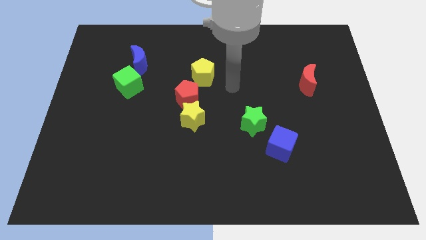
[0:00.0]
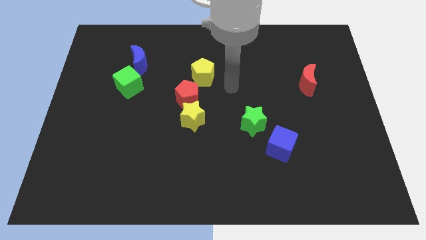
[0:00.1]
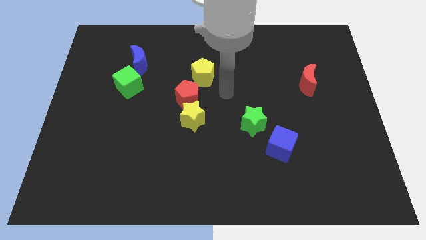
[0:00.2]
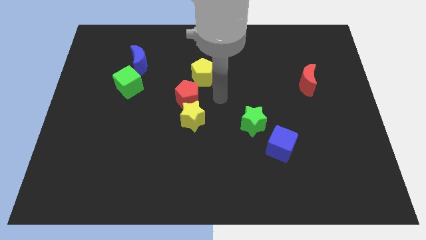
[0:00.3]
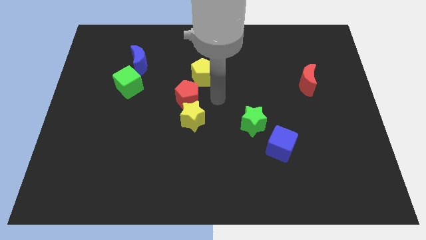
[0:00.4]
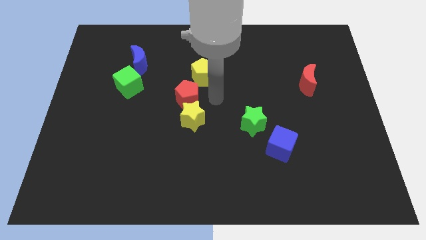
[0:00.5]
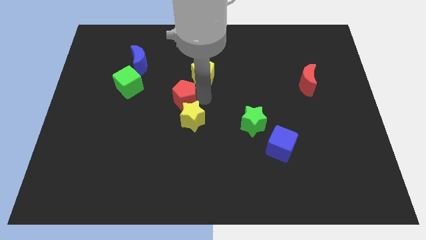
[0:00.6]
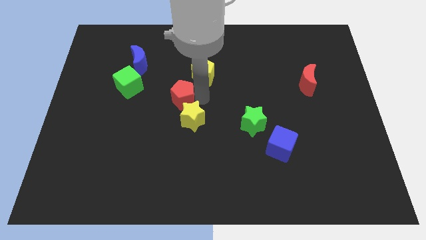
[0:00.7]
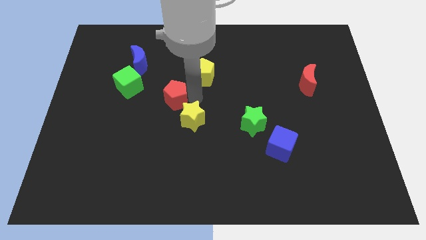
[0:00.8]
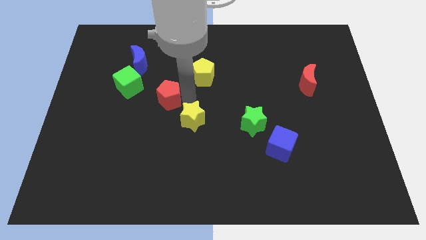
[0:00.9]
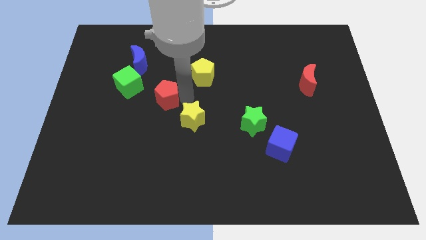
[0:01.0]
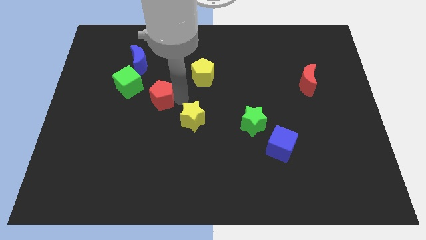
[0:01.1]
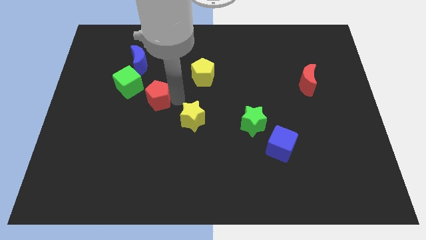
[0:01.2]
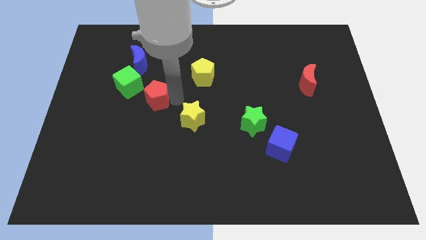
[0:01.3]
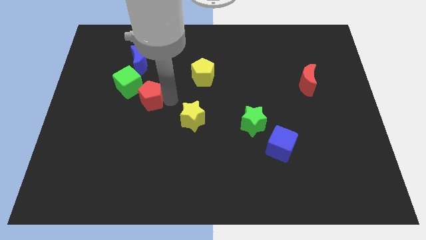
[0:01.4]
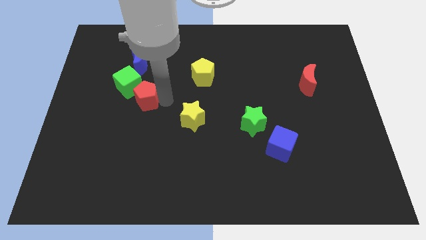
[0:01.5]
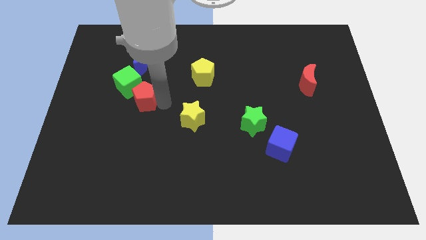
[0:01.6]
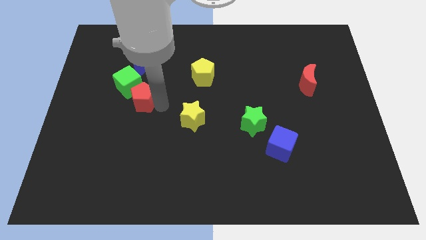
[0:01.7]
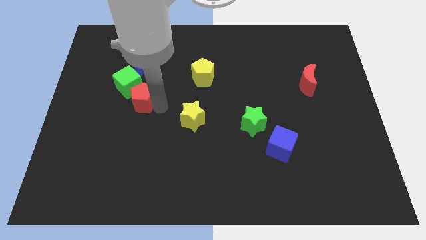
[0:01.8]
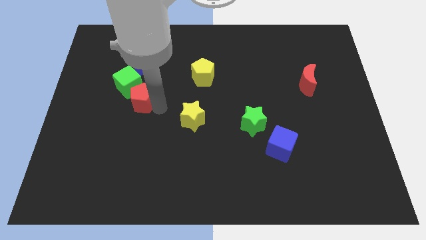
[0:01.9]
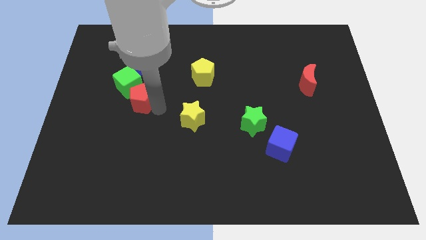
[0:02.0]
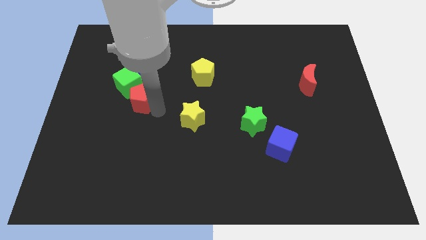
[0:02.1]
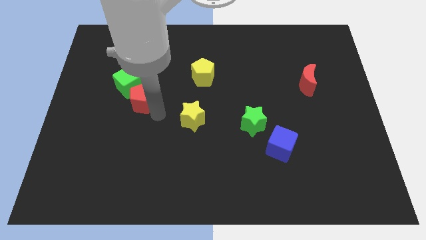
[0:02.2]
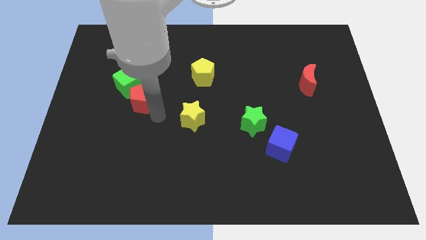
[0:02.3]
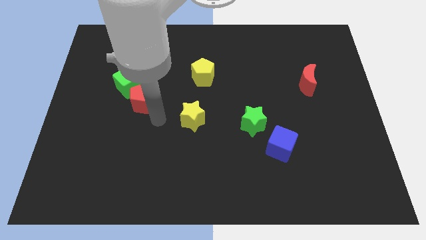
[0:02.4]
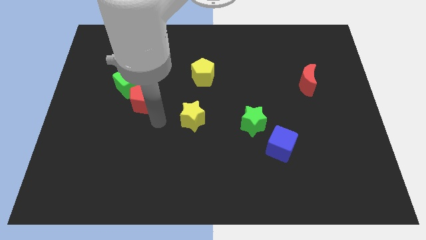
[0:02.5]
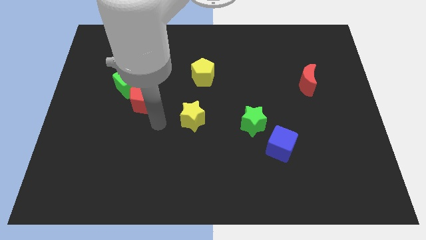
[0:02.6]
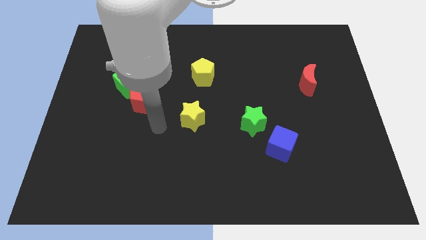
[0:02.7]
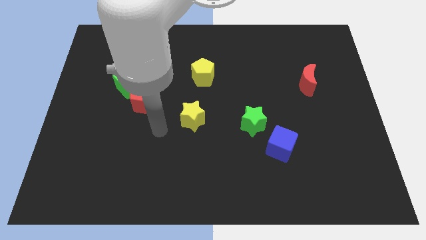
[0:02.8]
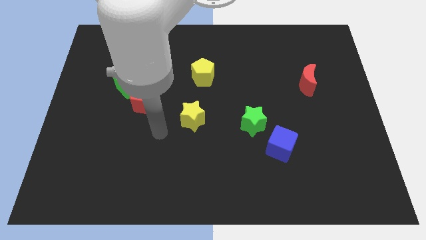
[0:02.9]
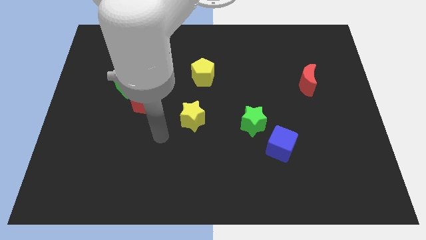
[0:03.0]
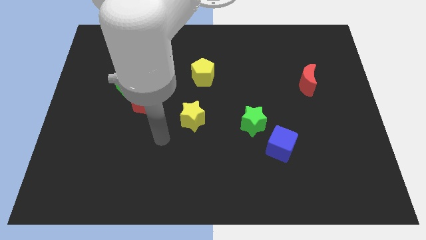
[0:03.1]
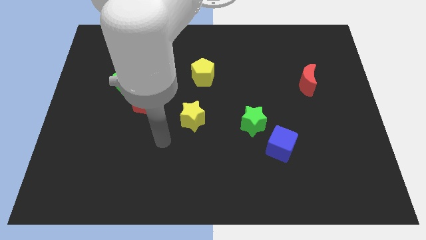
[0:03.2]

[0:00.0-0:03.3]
push the red pentagon to the bottom of the green cube

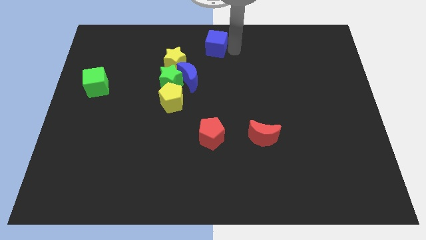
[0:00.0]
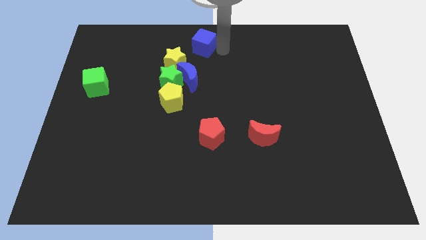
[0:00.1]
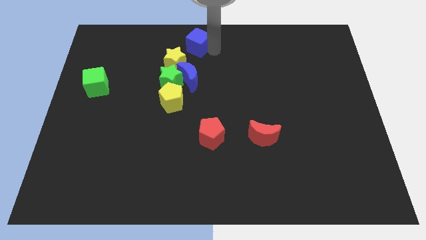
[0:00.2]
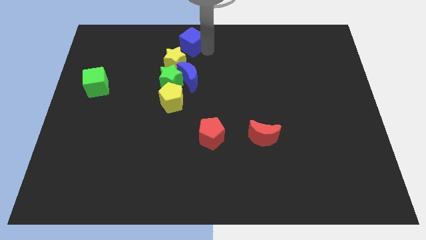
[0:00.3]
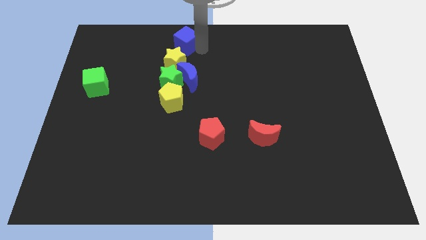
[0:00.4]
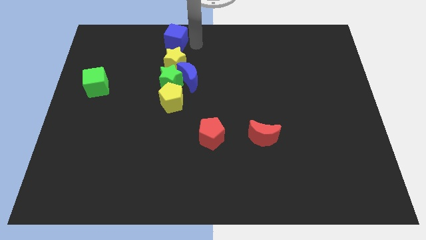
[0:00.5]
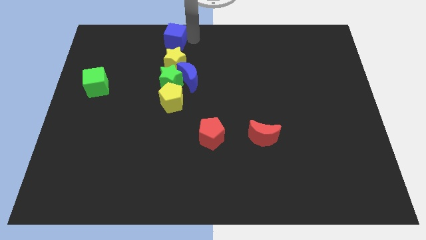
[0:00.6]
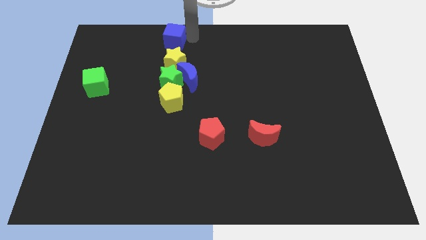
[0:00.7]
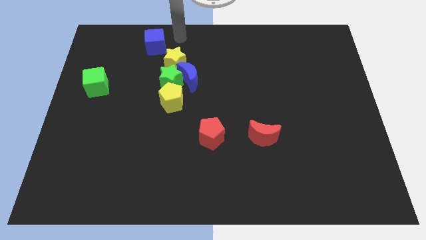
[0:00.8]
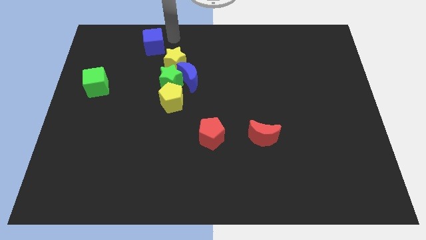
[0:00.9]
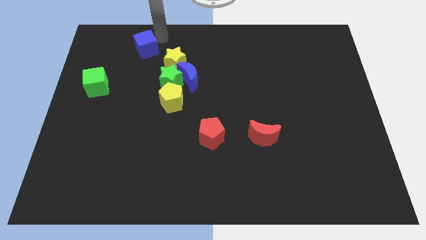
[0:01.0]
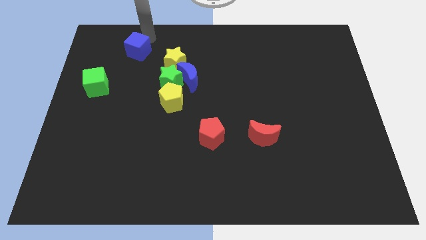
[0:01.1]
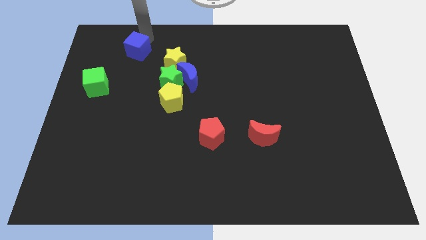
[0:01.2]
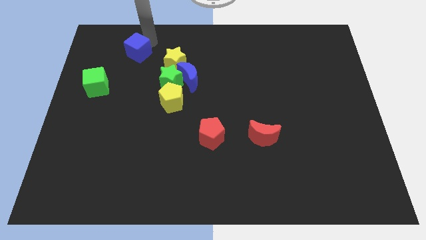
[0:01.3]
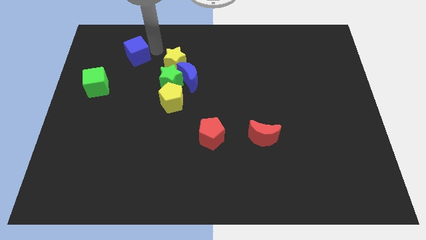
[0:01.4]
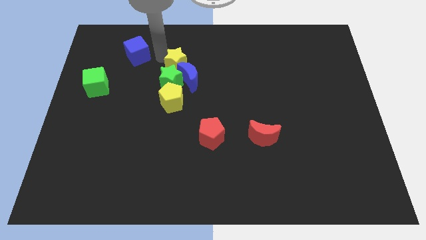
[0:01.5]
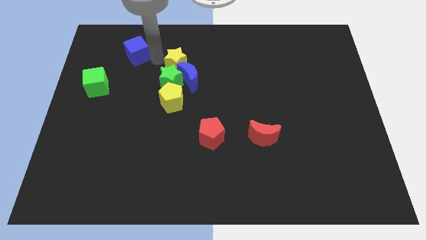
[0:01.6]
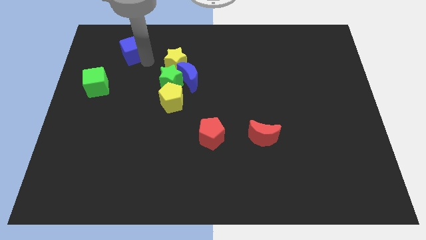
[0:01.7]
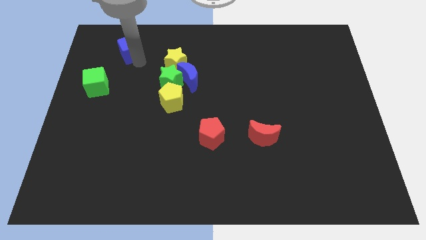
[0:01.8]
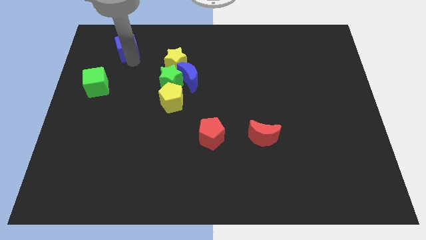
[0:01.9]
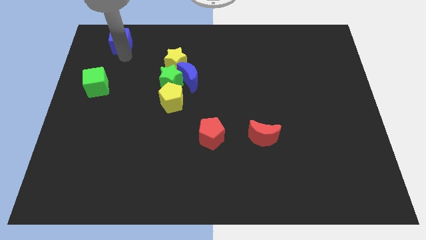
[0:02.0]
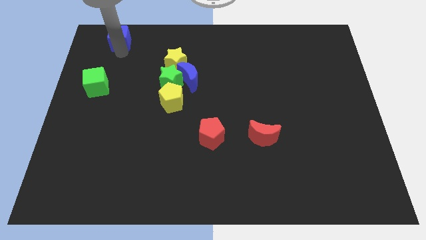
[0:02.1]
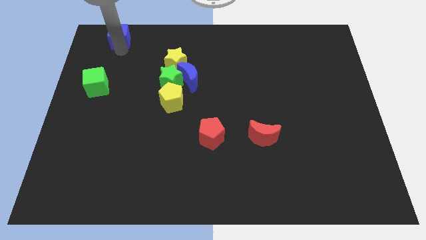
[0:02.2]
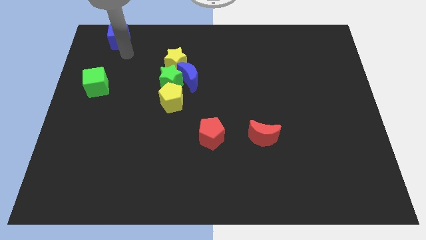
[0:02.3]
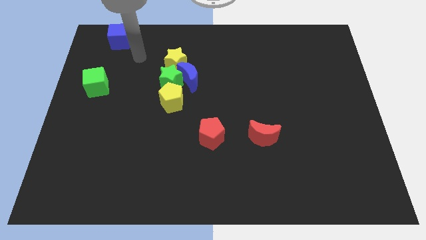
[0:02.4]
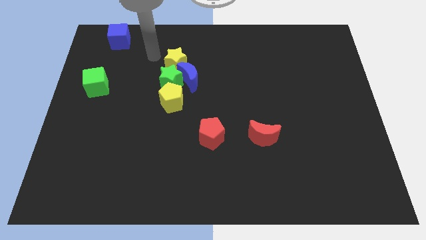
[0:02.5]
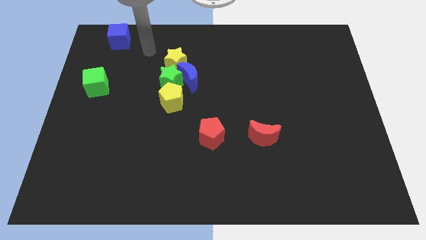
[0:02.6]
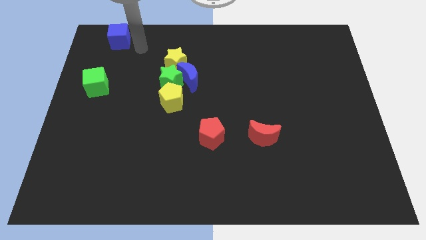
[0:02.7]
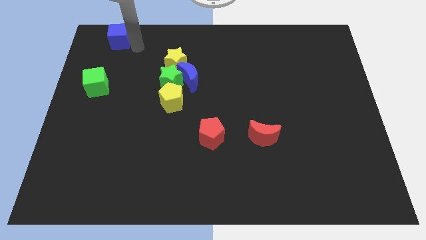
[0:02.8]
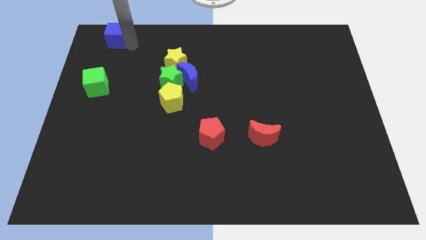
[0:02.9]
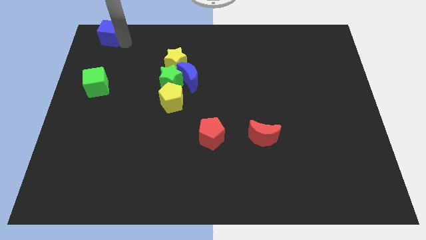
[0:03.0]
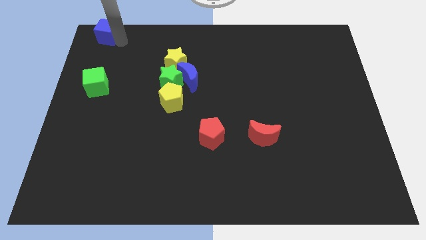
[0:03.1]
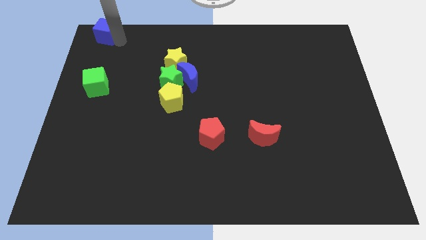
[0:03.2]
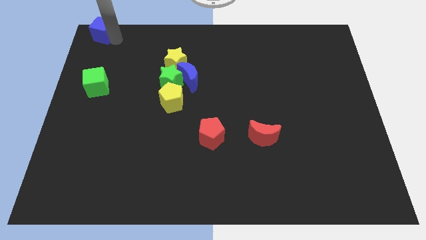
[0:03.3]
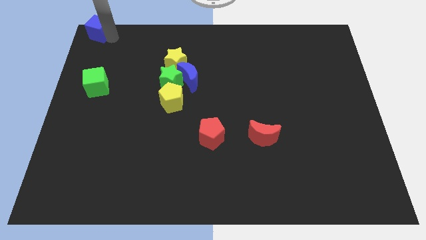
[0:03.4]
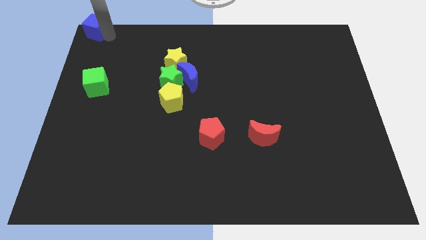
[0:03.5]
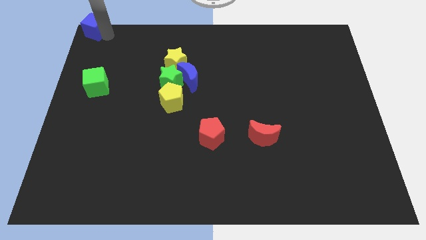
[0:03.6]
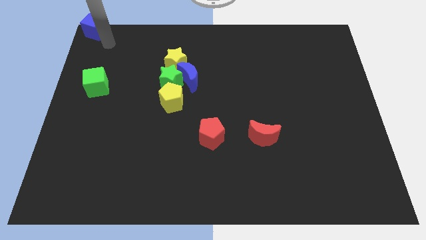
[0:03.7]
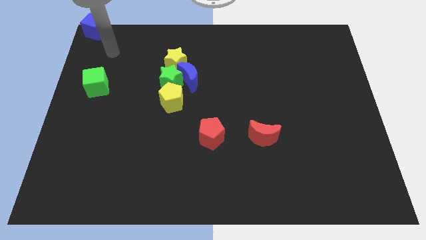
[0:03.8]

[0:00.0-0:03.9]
put the blue cube at the top left corner of the board

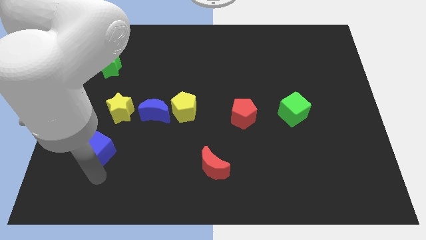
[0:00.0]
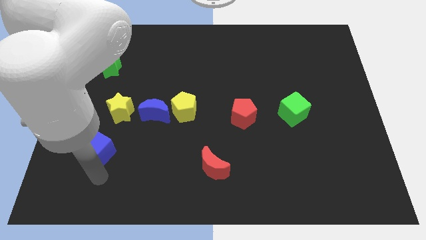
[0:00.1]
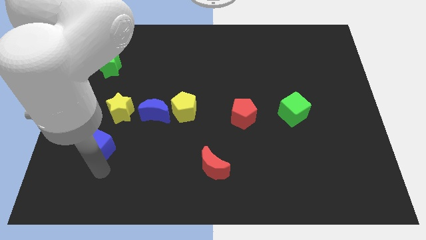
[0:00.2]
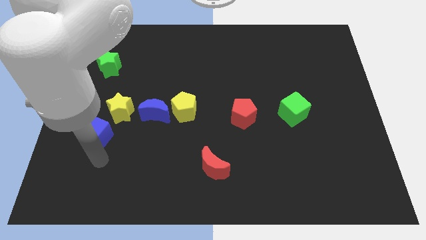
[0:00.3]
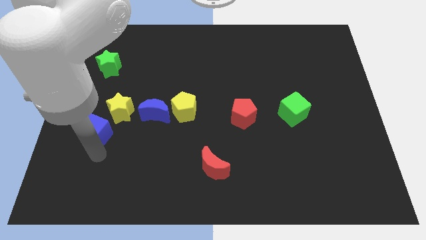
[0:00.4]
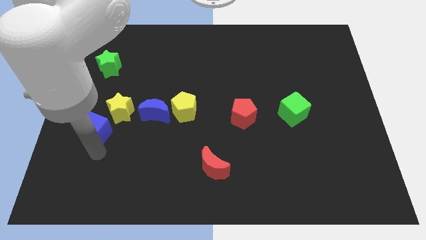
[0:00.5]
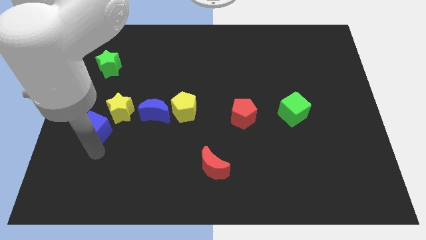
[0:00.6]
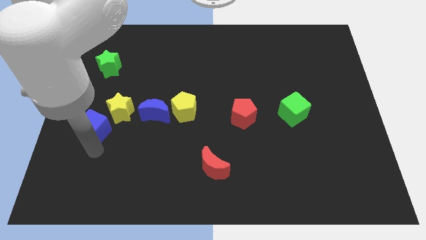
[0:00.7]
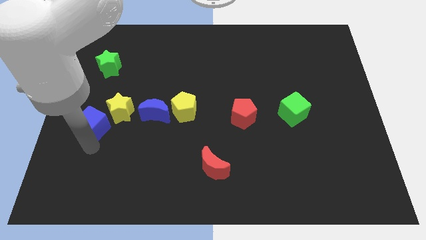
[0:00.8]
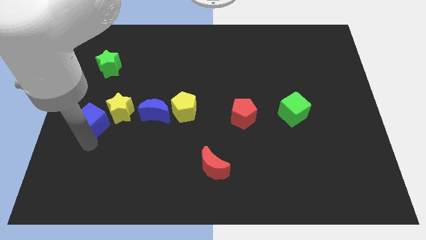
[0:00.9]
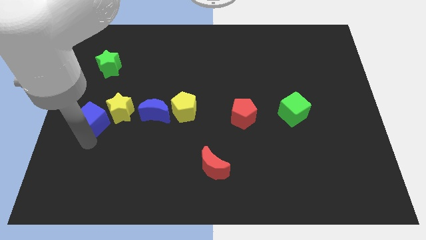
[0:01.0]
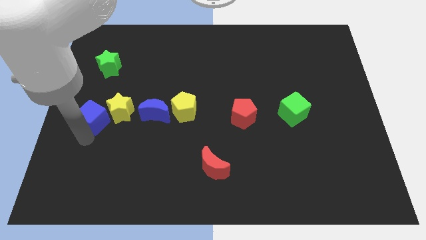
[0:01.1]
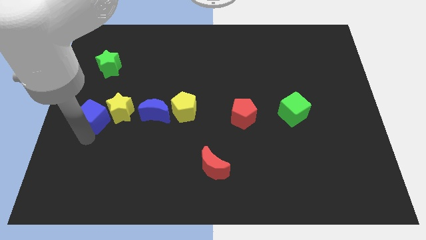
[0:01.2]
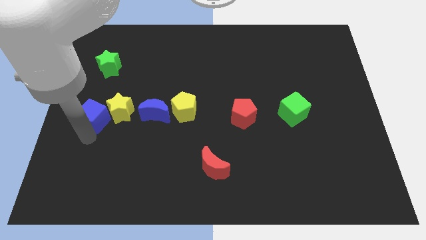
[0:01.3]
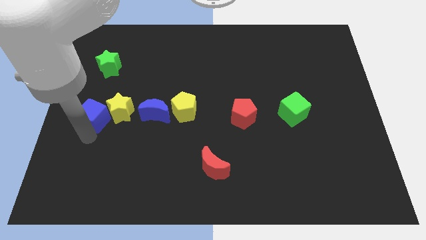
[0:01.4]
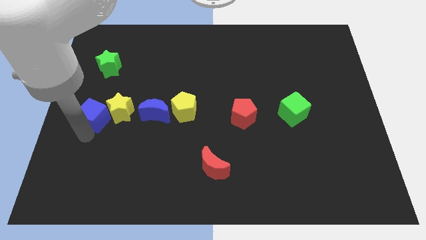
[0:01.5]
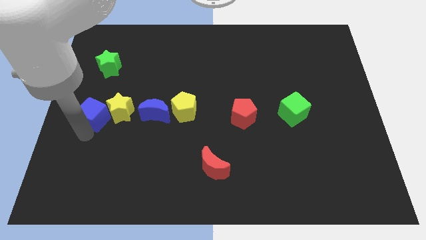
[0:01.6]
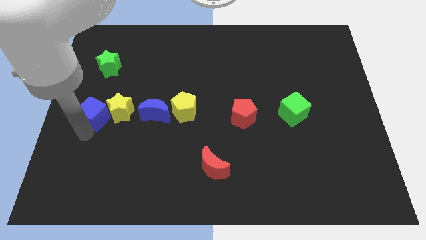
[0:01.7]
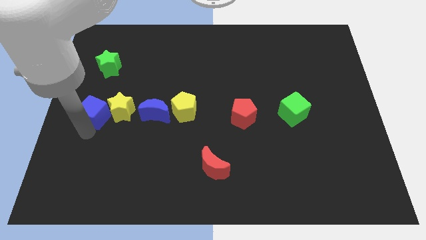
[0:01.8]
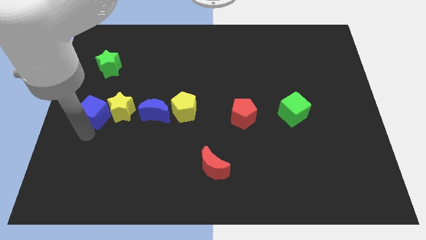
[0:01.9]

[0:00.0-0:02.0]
move the blue cube left to the yellow star
